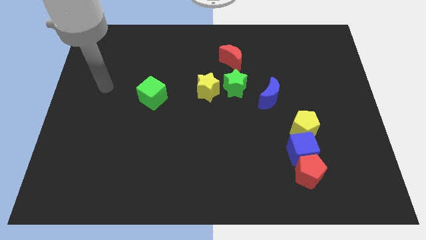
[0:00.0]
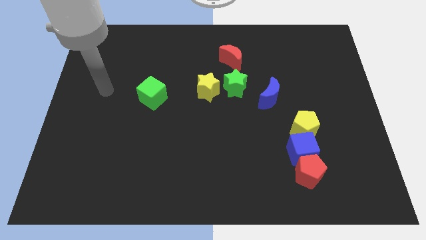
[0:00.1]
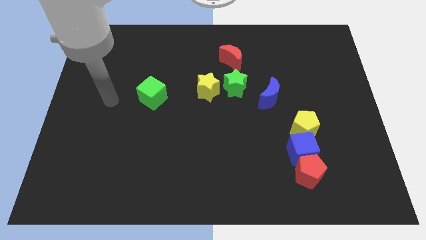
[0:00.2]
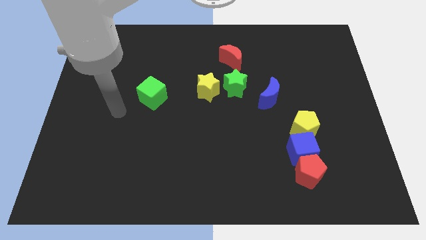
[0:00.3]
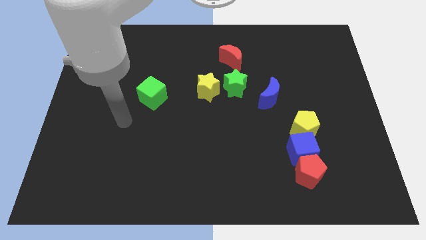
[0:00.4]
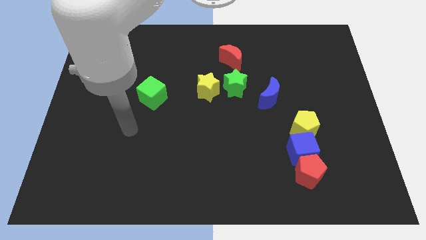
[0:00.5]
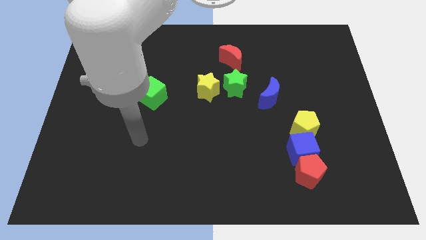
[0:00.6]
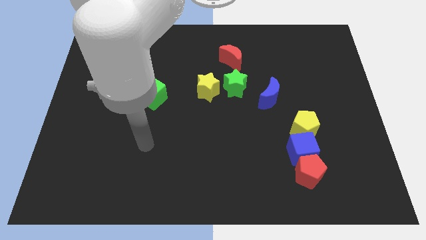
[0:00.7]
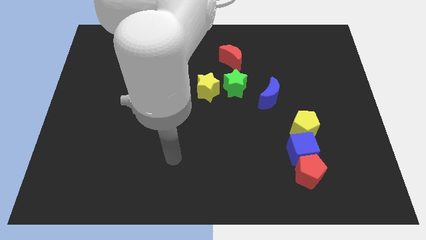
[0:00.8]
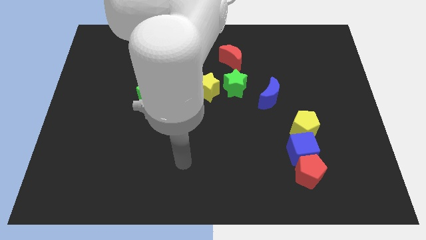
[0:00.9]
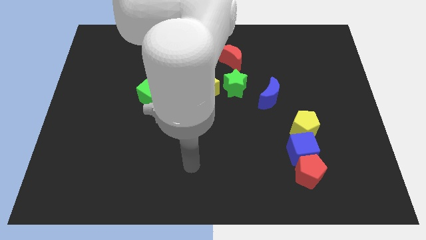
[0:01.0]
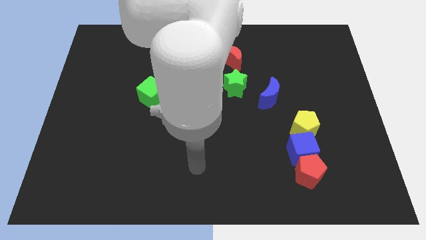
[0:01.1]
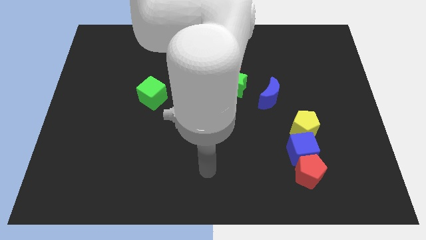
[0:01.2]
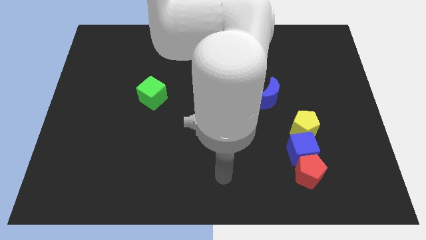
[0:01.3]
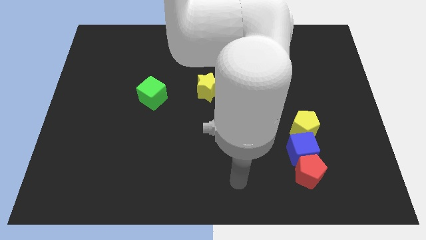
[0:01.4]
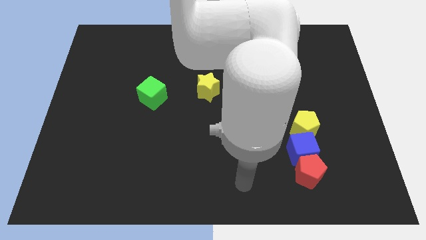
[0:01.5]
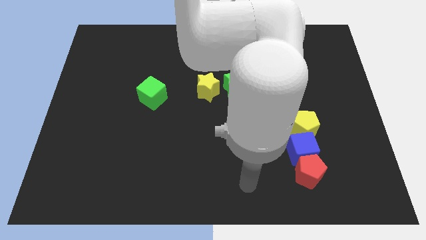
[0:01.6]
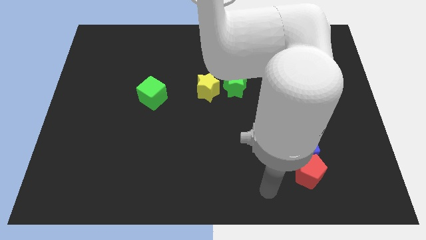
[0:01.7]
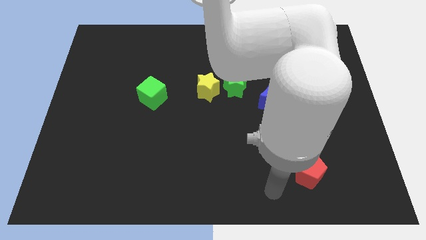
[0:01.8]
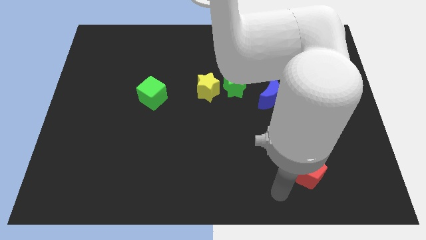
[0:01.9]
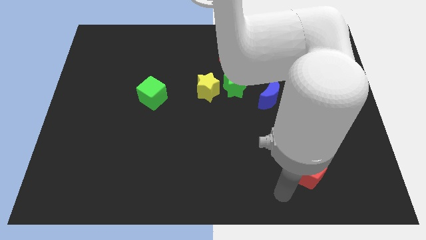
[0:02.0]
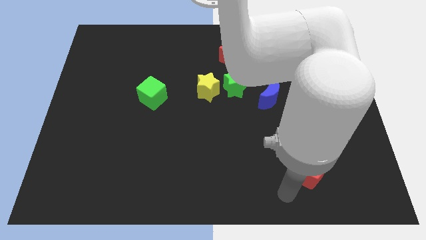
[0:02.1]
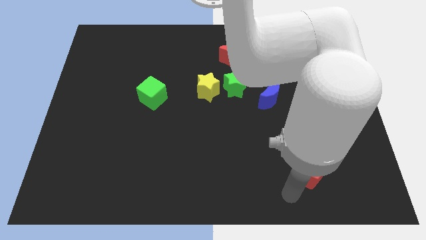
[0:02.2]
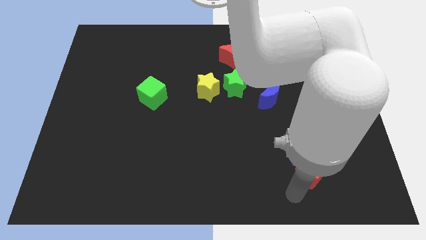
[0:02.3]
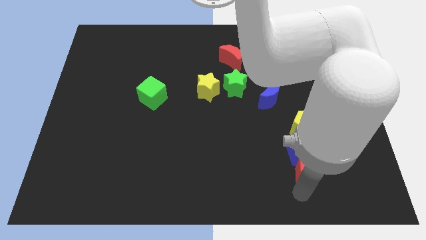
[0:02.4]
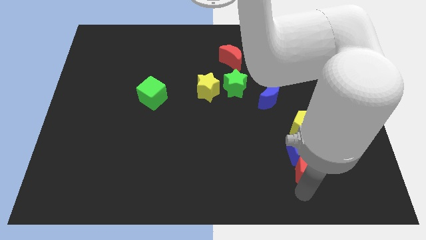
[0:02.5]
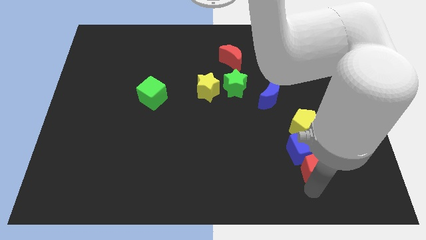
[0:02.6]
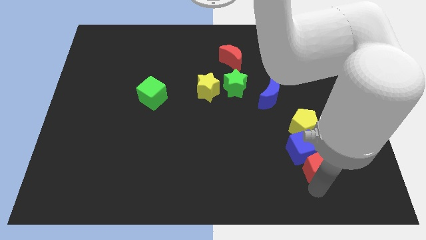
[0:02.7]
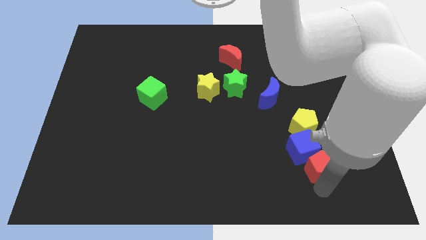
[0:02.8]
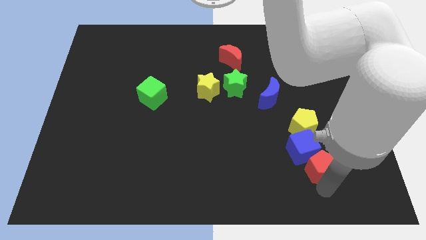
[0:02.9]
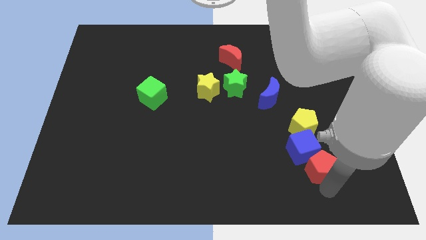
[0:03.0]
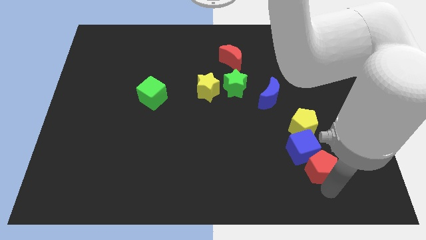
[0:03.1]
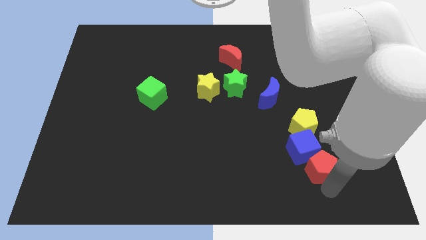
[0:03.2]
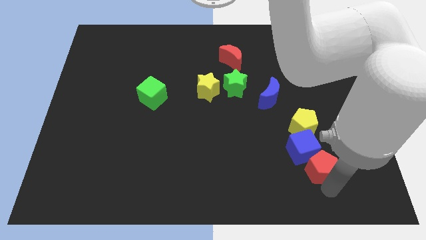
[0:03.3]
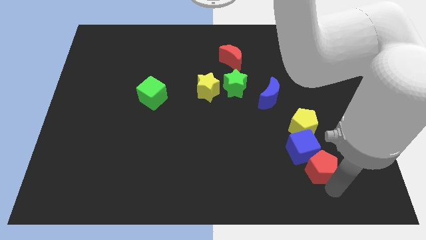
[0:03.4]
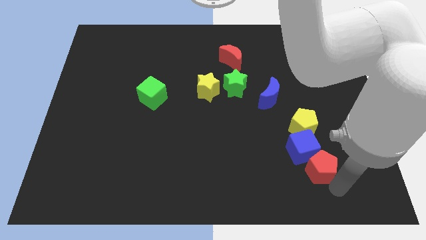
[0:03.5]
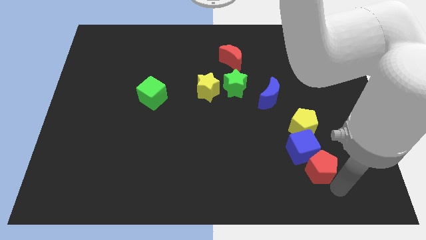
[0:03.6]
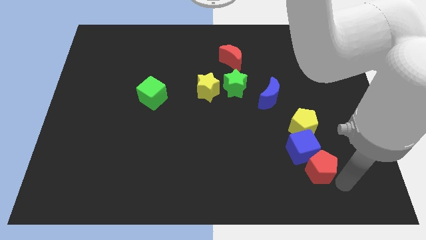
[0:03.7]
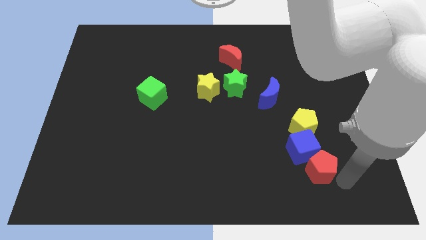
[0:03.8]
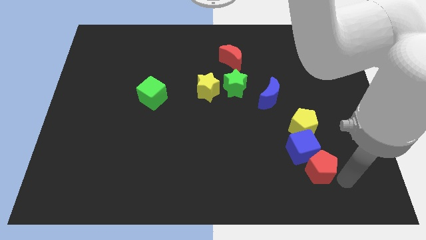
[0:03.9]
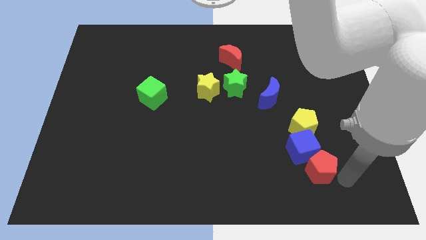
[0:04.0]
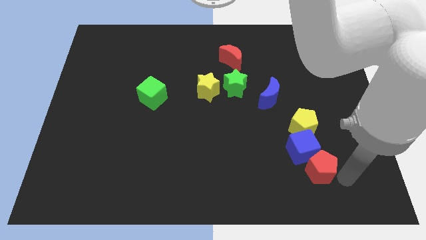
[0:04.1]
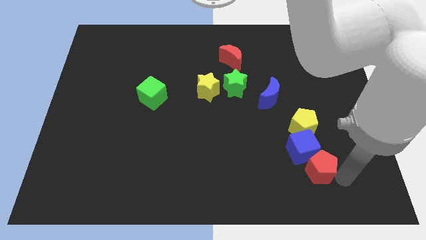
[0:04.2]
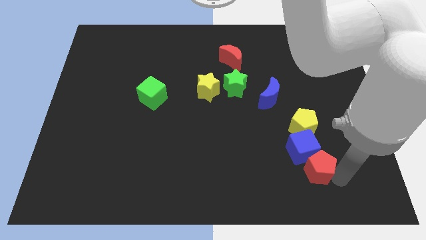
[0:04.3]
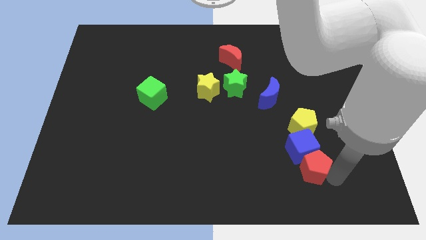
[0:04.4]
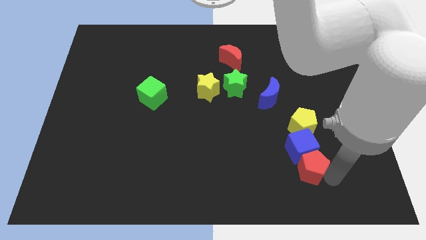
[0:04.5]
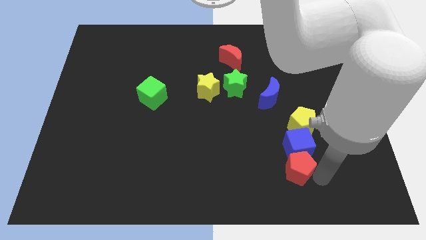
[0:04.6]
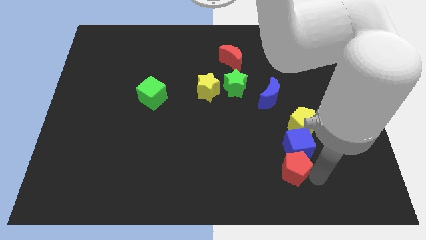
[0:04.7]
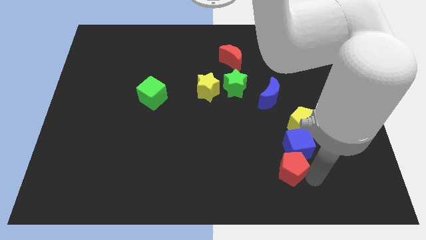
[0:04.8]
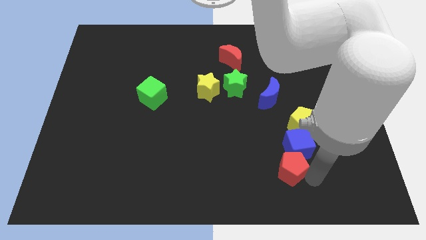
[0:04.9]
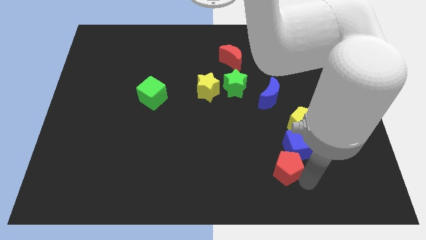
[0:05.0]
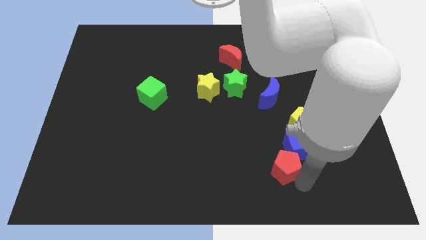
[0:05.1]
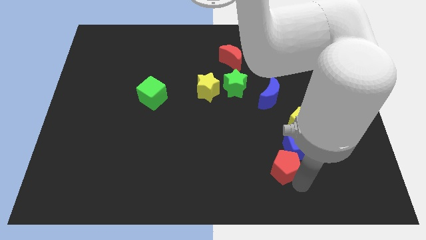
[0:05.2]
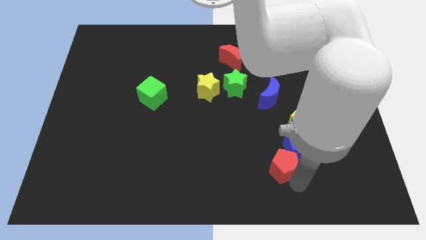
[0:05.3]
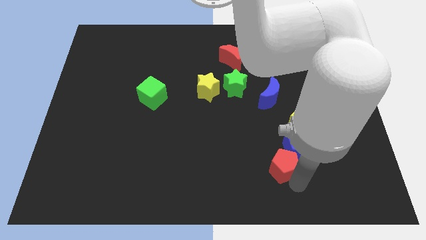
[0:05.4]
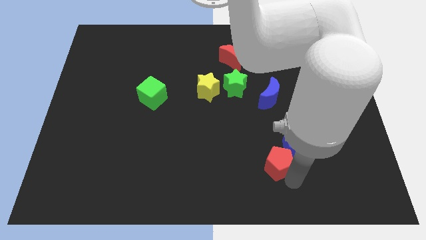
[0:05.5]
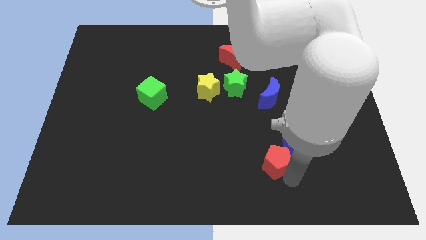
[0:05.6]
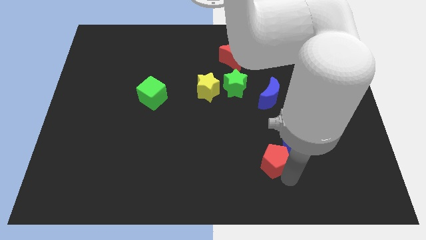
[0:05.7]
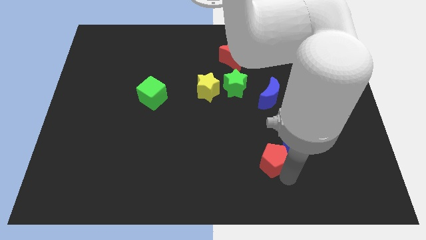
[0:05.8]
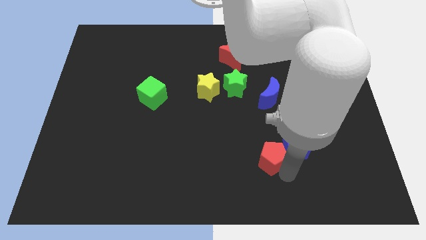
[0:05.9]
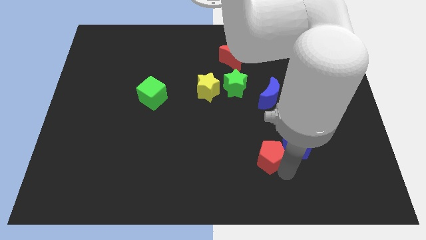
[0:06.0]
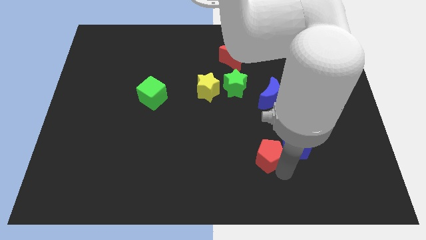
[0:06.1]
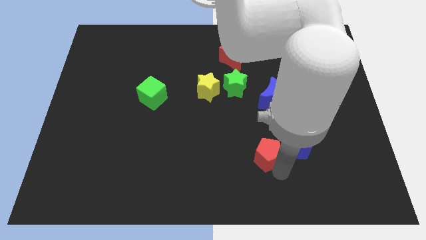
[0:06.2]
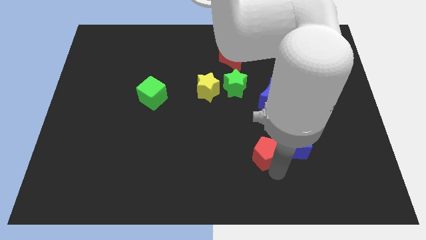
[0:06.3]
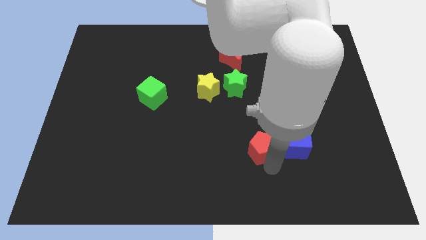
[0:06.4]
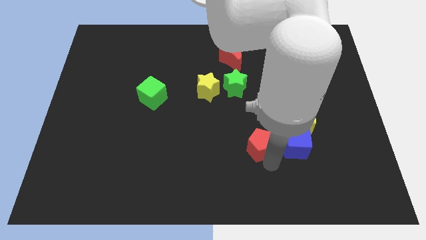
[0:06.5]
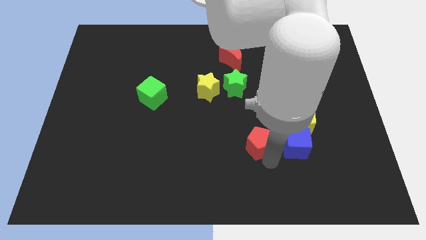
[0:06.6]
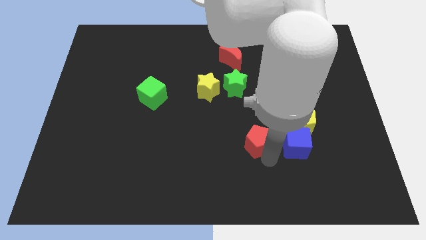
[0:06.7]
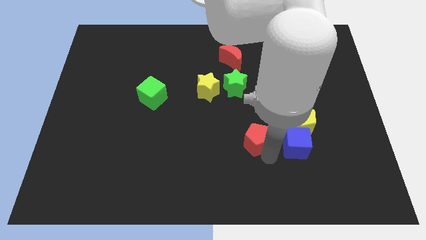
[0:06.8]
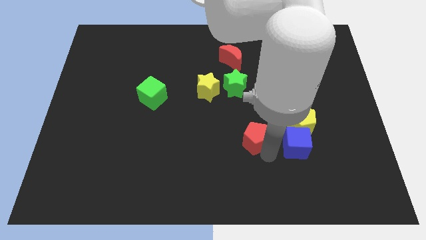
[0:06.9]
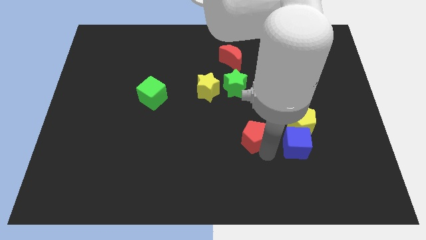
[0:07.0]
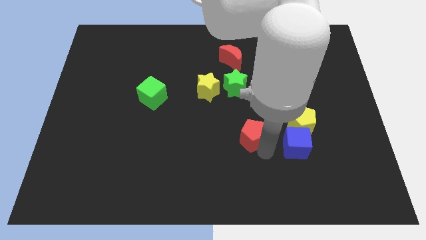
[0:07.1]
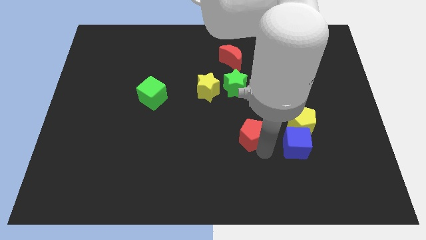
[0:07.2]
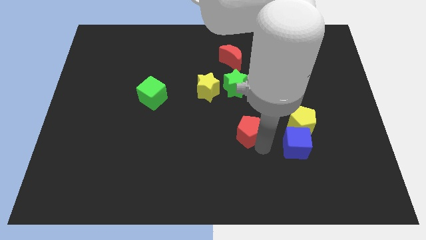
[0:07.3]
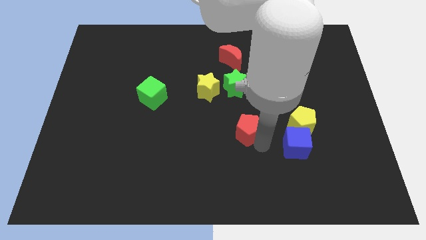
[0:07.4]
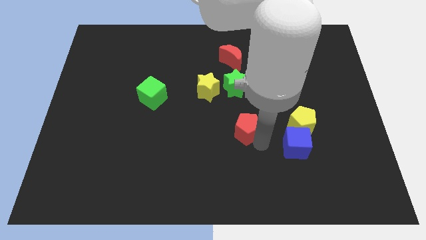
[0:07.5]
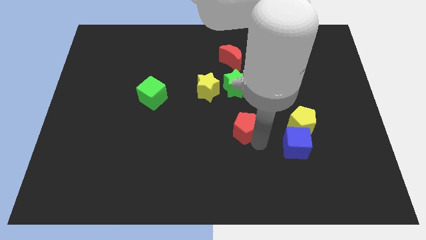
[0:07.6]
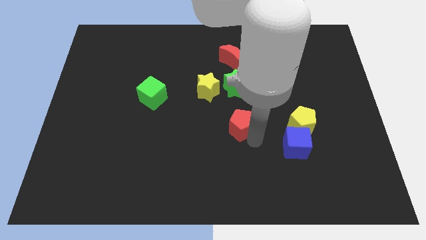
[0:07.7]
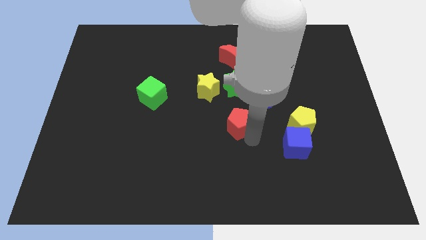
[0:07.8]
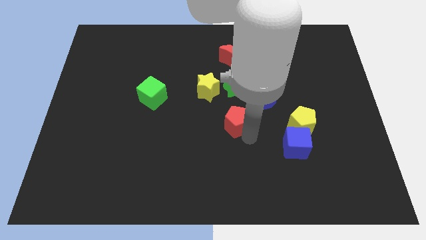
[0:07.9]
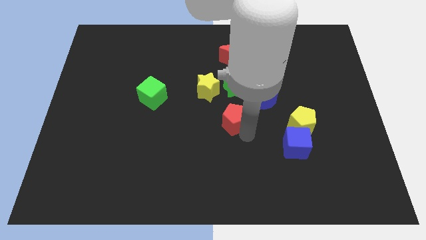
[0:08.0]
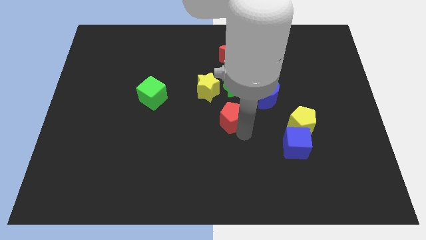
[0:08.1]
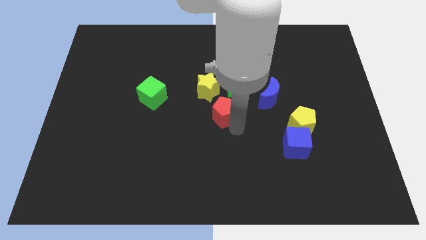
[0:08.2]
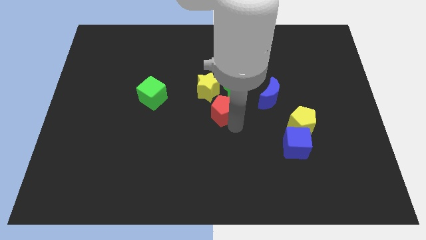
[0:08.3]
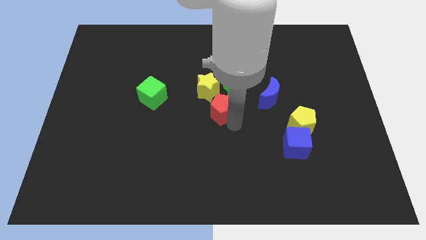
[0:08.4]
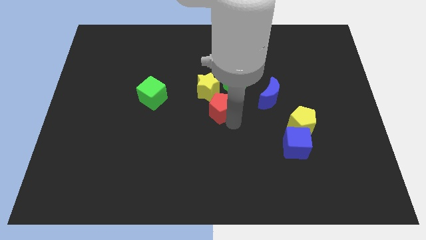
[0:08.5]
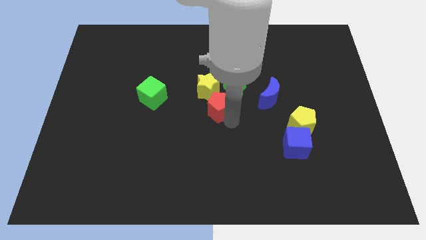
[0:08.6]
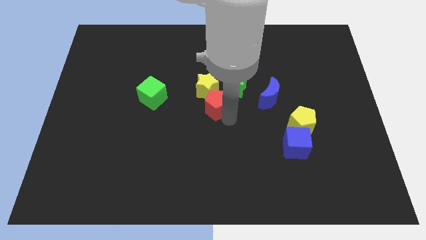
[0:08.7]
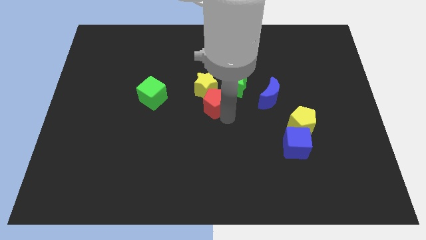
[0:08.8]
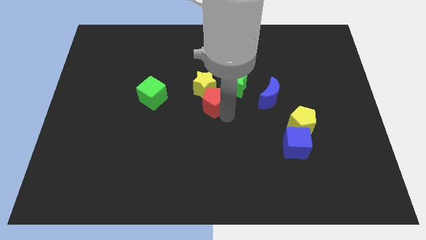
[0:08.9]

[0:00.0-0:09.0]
move the red pentagon towards the yellow star
